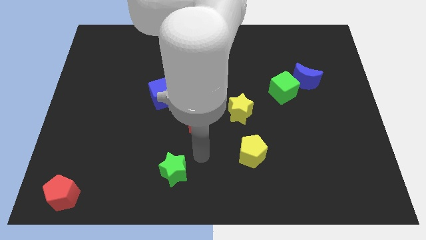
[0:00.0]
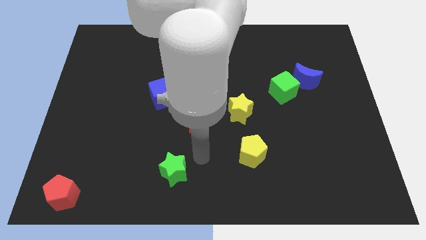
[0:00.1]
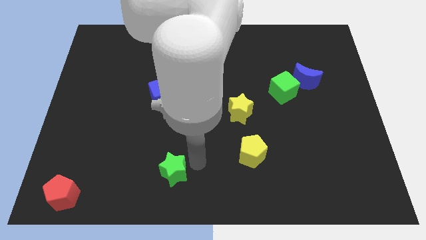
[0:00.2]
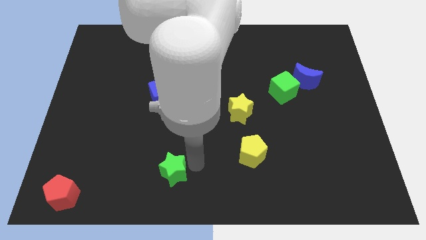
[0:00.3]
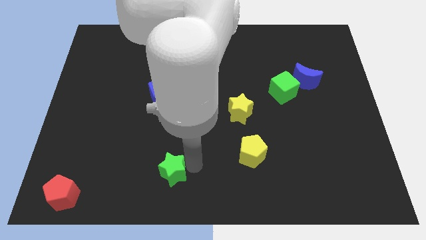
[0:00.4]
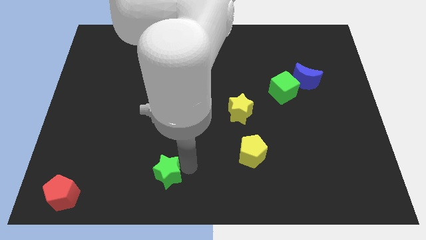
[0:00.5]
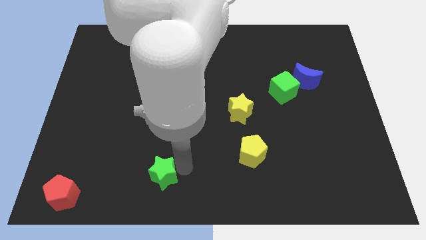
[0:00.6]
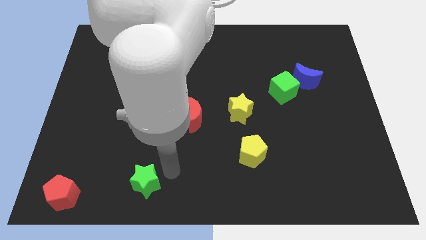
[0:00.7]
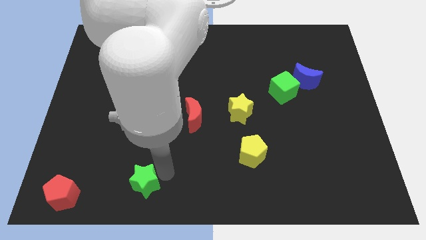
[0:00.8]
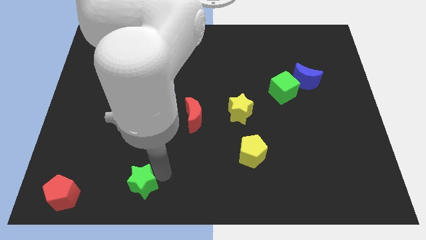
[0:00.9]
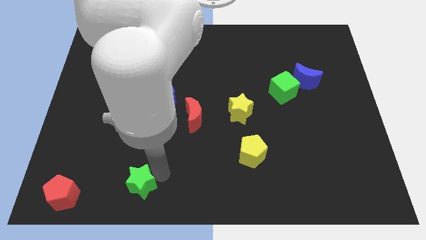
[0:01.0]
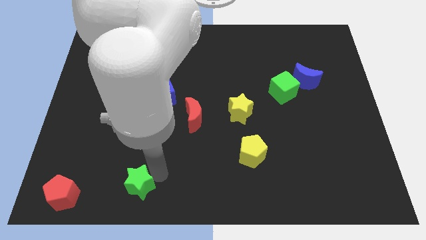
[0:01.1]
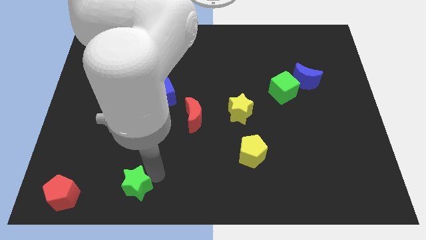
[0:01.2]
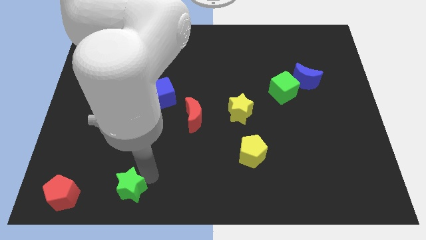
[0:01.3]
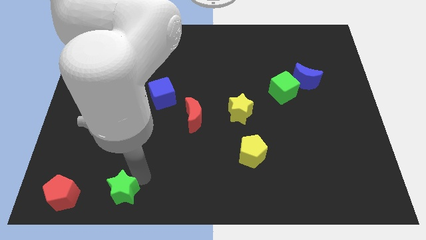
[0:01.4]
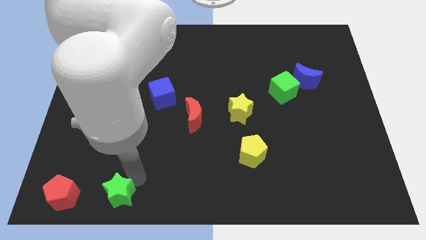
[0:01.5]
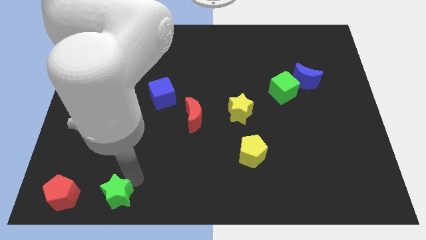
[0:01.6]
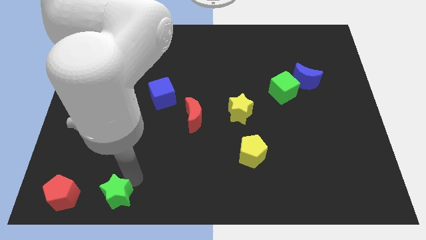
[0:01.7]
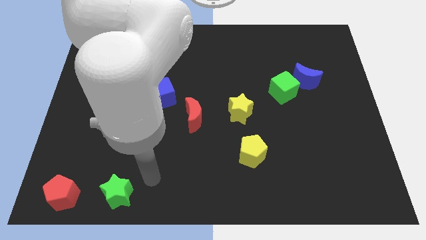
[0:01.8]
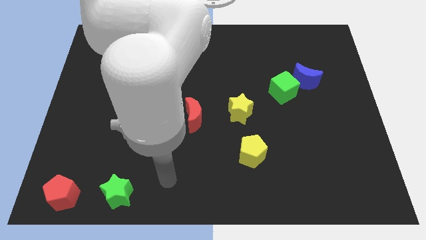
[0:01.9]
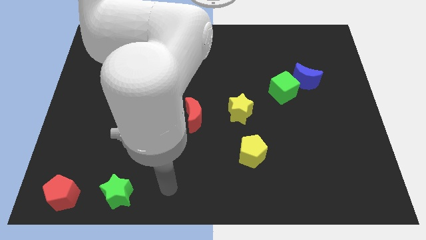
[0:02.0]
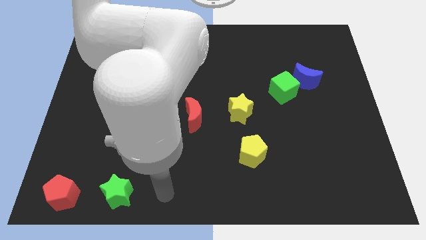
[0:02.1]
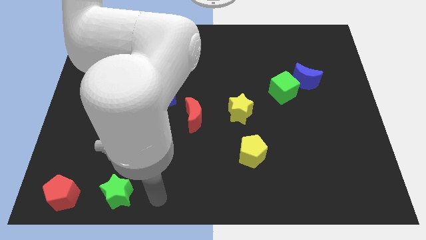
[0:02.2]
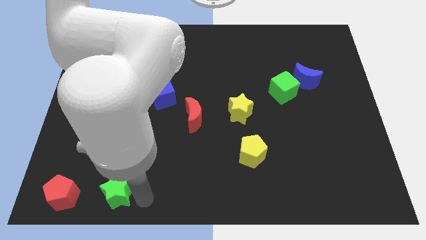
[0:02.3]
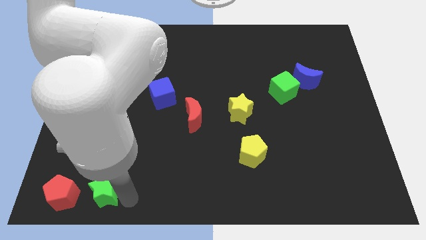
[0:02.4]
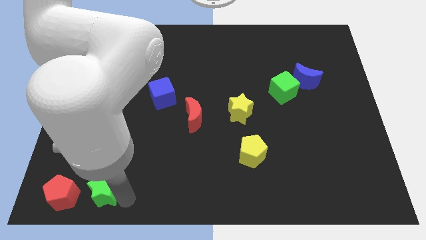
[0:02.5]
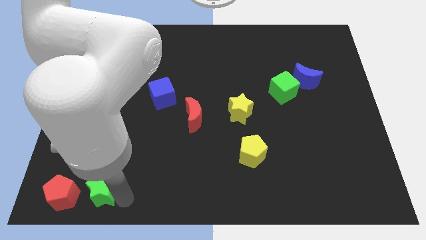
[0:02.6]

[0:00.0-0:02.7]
move the green star right towards red pentagon

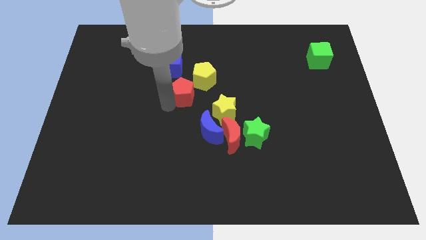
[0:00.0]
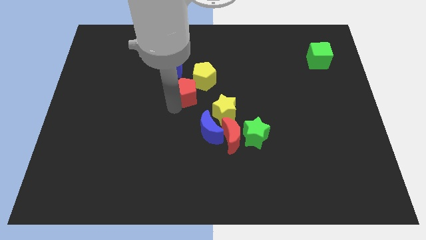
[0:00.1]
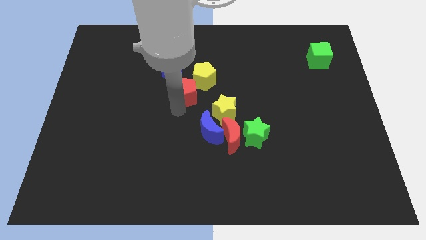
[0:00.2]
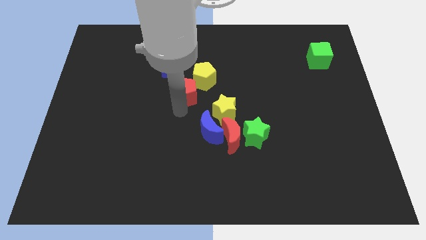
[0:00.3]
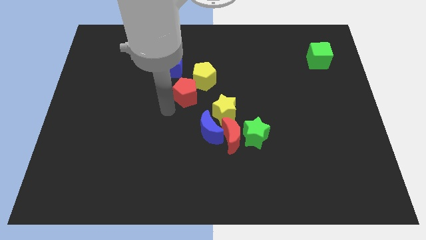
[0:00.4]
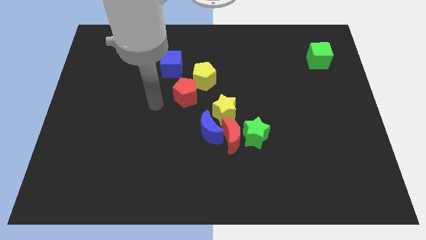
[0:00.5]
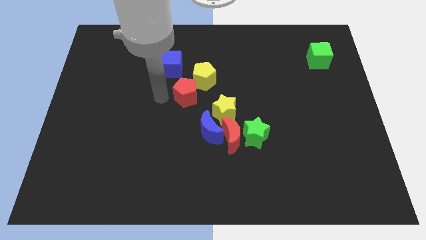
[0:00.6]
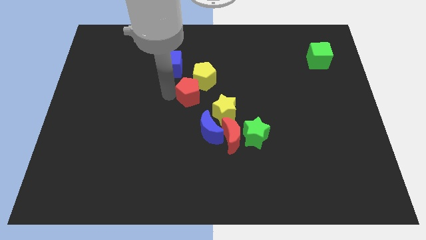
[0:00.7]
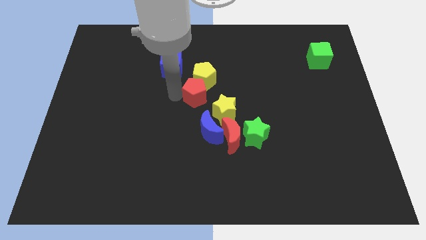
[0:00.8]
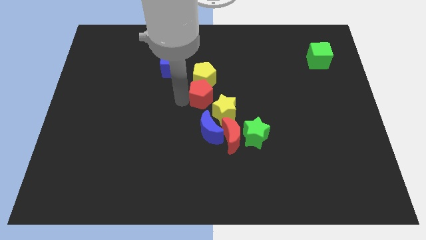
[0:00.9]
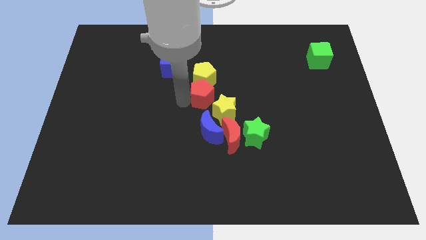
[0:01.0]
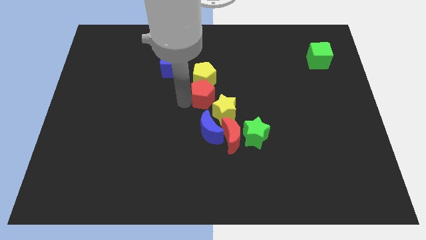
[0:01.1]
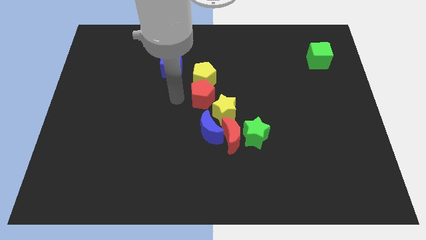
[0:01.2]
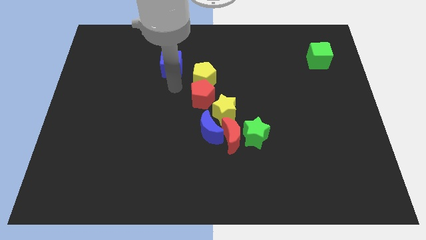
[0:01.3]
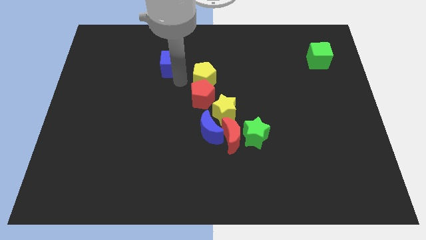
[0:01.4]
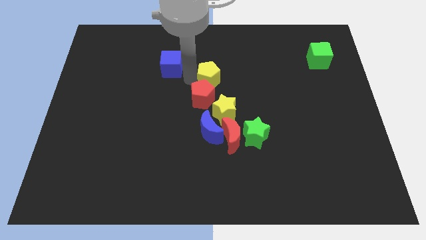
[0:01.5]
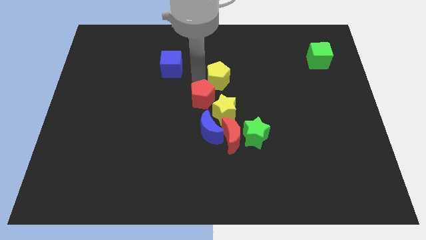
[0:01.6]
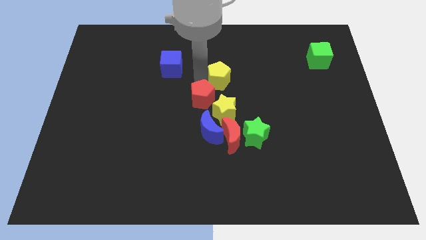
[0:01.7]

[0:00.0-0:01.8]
place red pentagon to the bottom of yellow pentagon

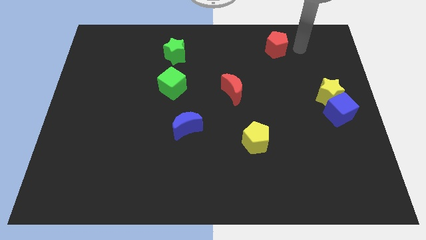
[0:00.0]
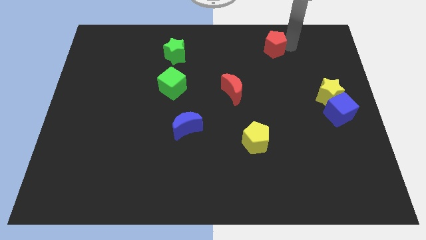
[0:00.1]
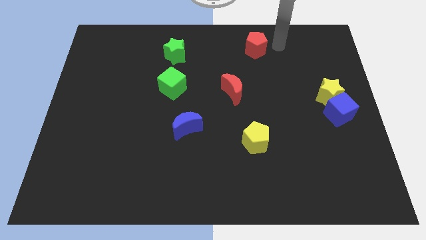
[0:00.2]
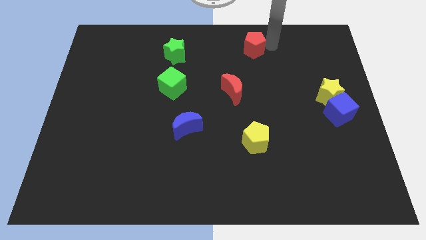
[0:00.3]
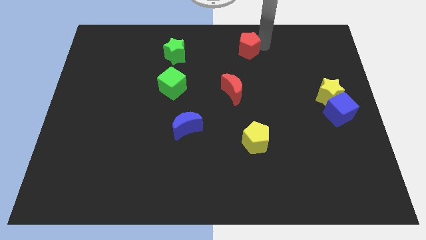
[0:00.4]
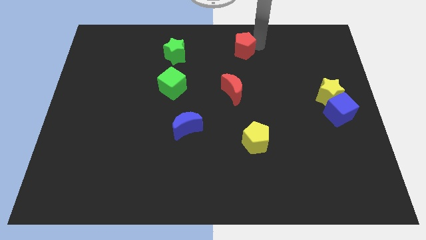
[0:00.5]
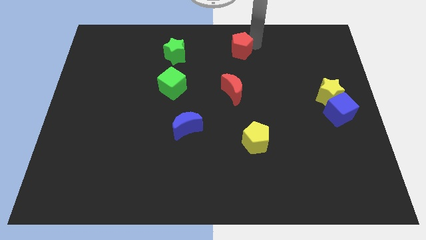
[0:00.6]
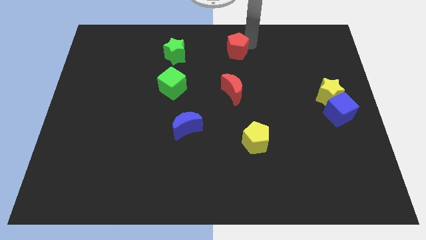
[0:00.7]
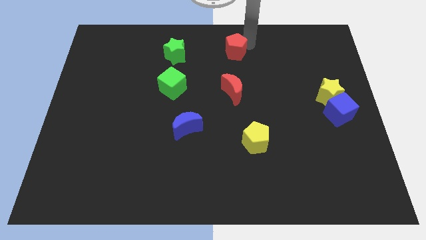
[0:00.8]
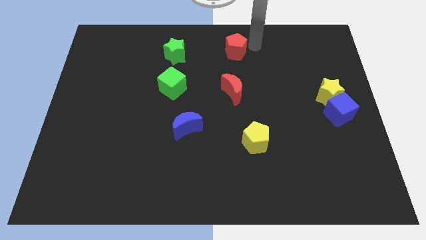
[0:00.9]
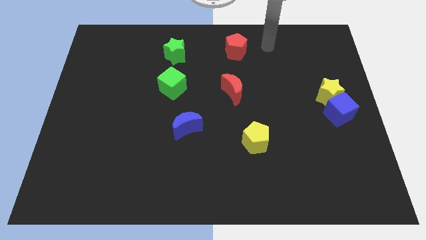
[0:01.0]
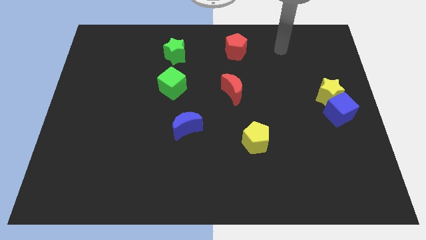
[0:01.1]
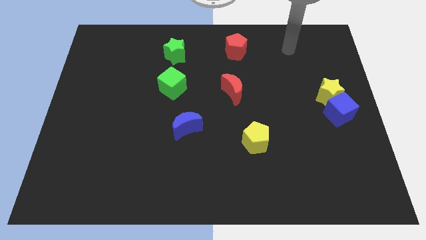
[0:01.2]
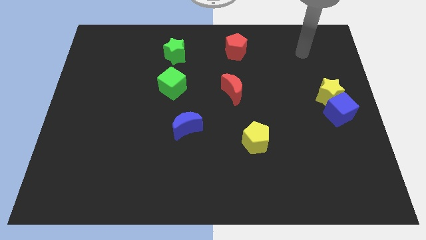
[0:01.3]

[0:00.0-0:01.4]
move the red pentagon above the red moon

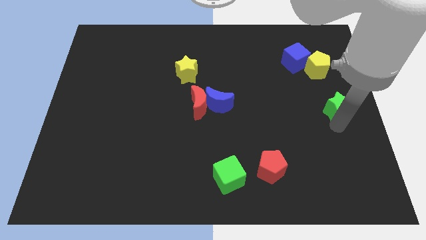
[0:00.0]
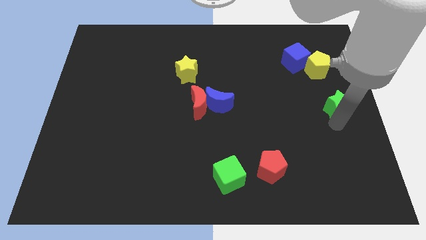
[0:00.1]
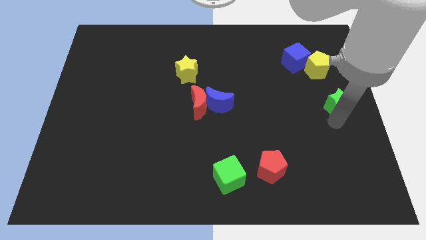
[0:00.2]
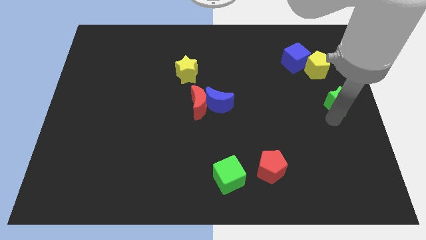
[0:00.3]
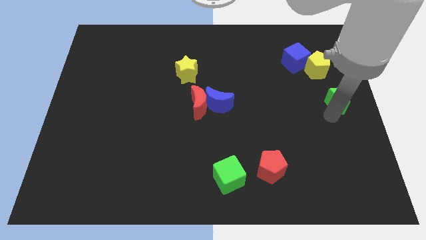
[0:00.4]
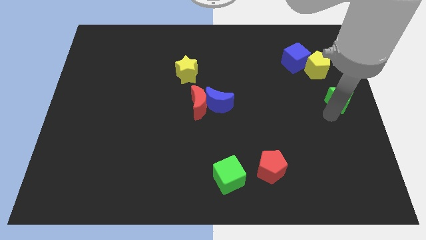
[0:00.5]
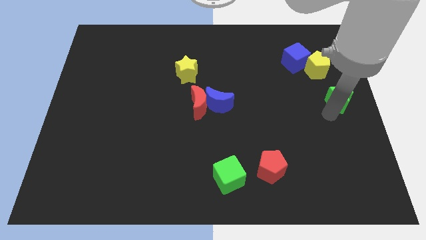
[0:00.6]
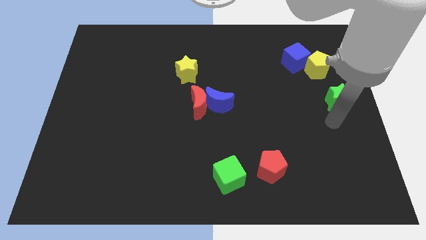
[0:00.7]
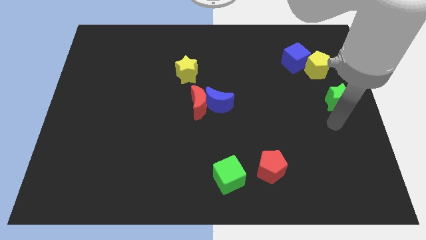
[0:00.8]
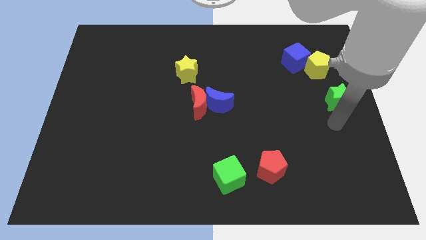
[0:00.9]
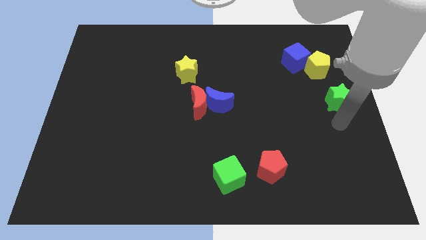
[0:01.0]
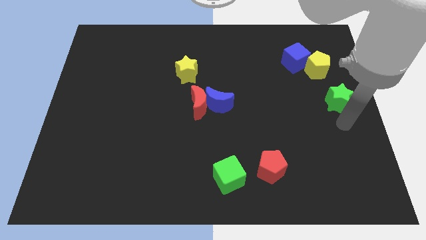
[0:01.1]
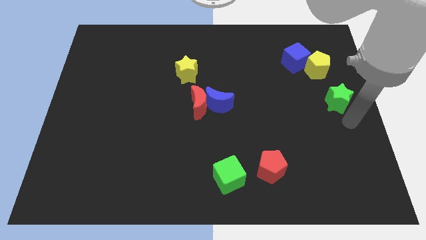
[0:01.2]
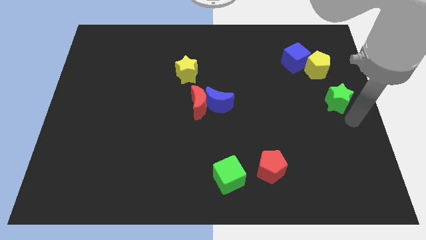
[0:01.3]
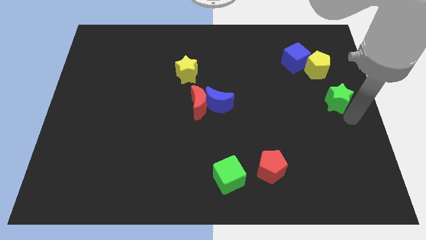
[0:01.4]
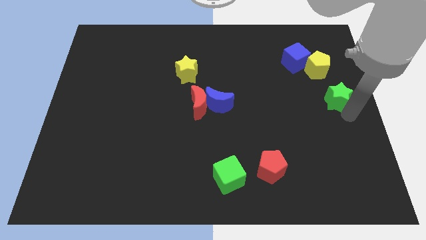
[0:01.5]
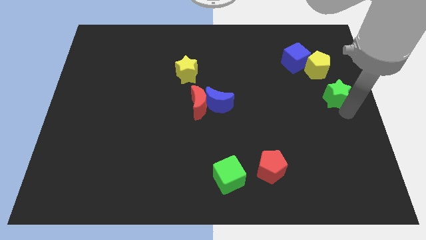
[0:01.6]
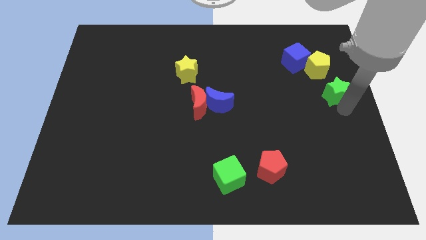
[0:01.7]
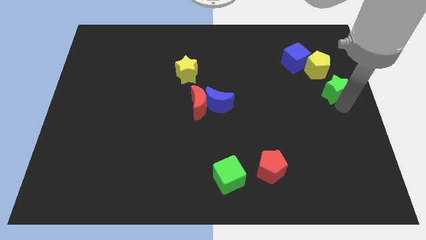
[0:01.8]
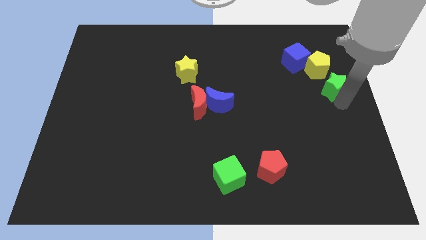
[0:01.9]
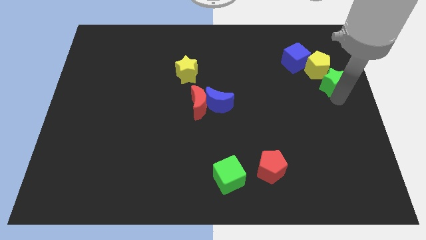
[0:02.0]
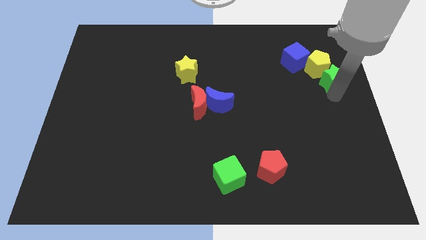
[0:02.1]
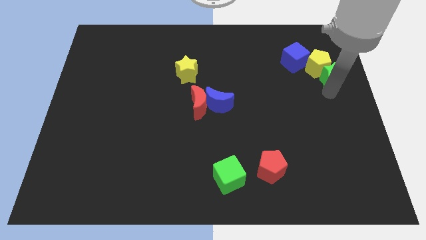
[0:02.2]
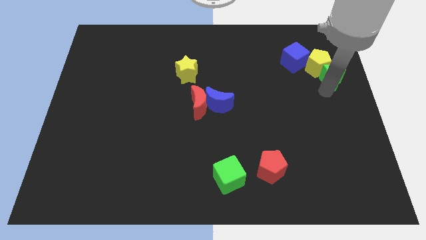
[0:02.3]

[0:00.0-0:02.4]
push the green star into the yellow pentagon

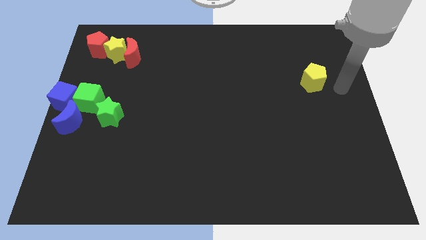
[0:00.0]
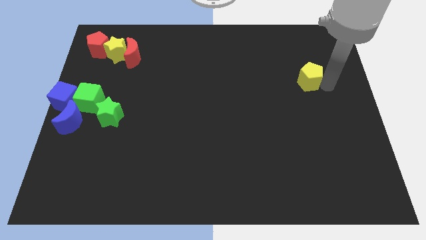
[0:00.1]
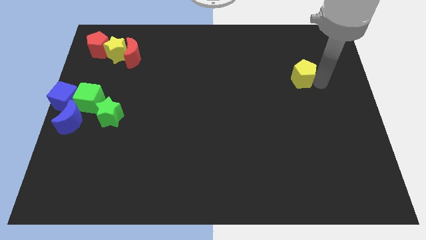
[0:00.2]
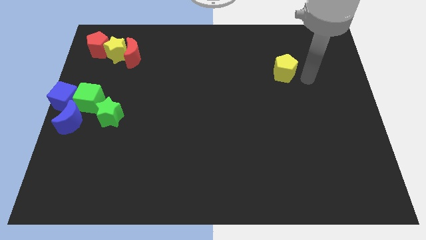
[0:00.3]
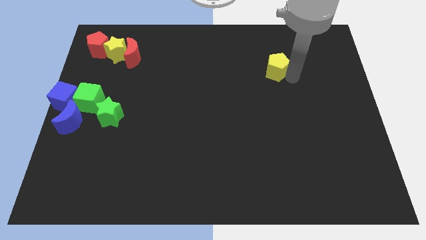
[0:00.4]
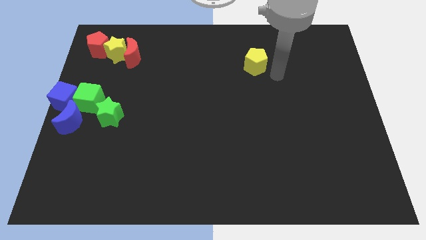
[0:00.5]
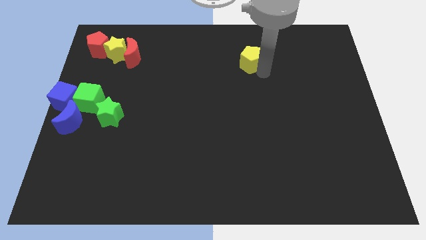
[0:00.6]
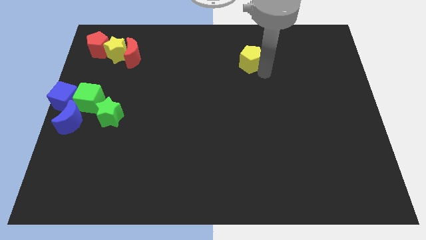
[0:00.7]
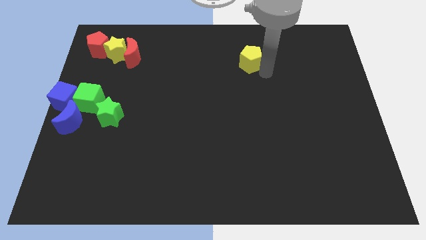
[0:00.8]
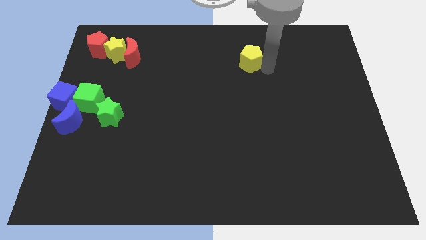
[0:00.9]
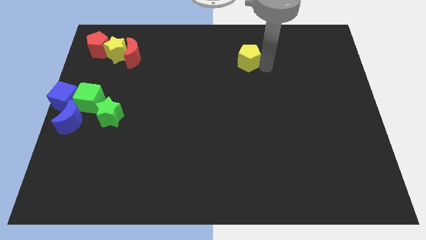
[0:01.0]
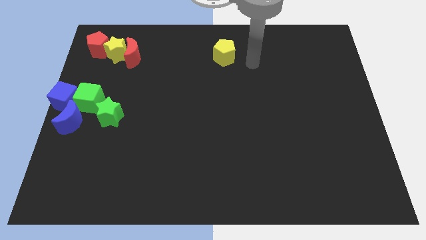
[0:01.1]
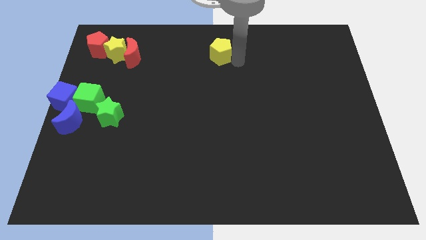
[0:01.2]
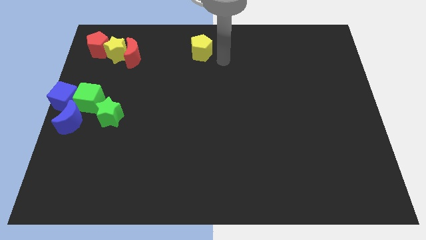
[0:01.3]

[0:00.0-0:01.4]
place the yellow pentagon at the top center of the board
